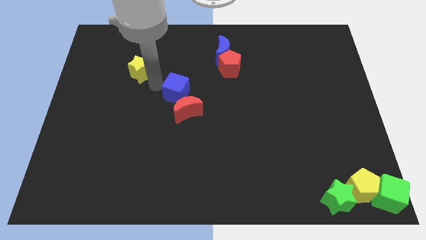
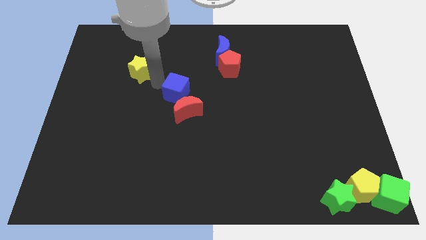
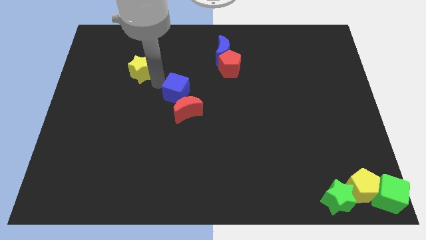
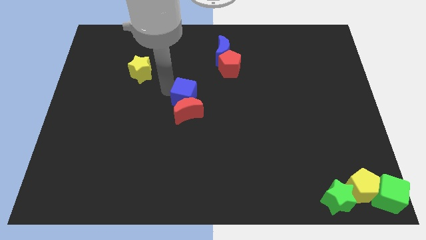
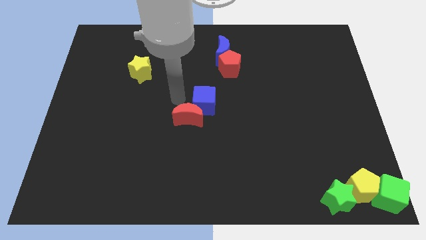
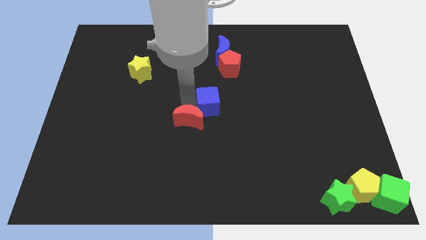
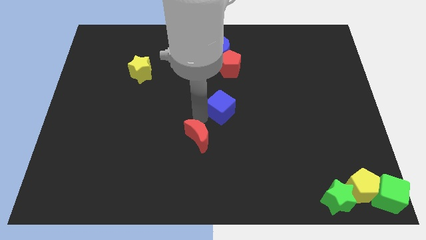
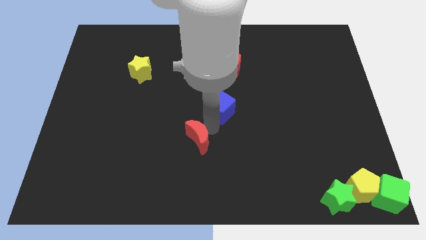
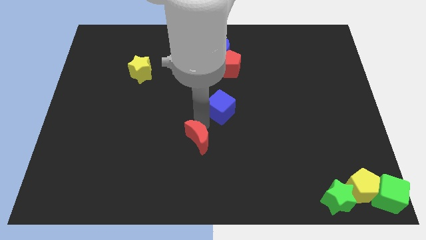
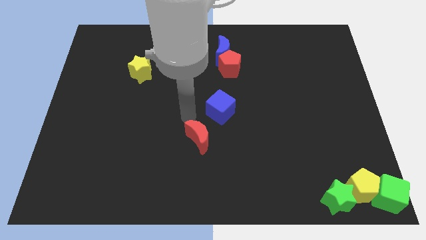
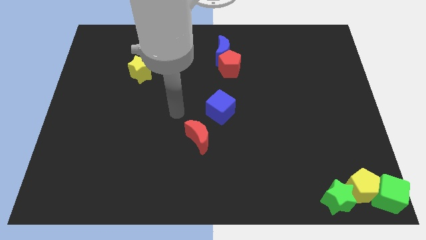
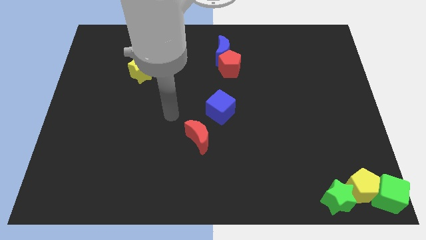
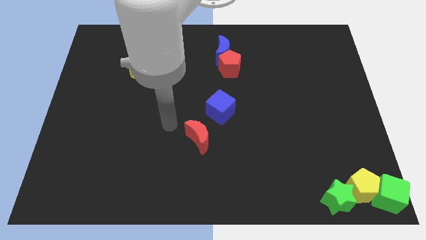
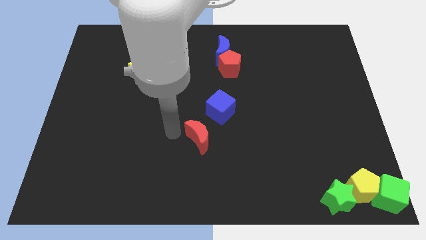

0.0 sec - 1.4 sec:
separate the blue cube and red moon

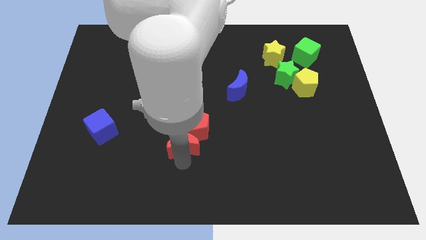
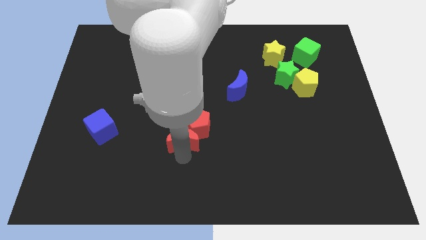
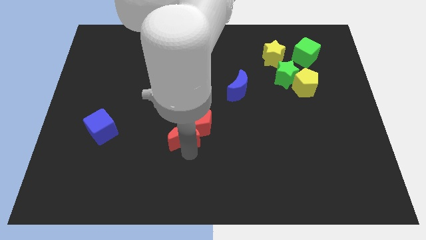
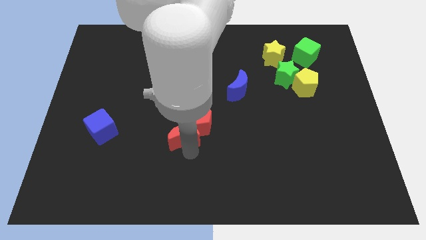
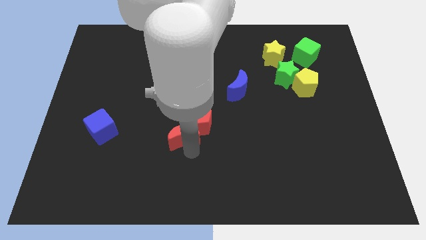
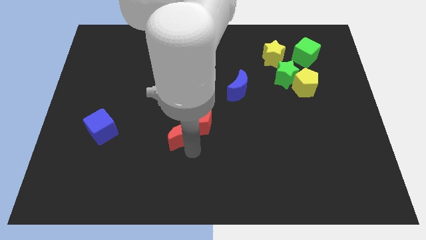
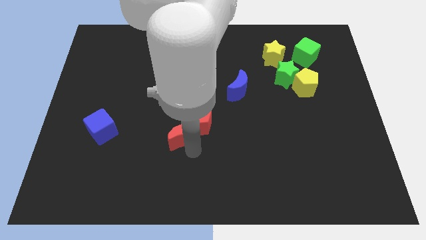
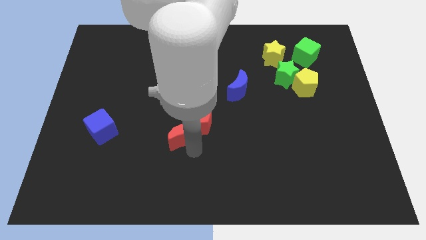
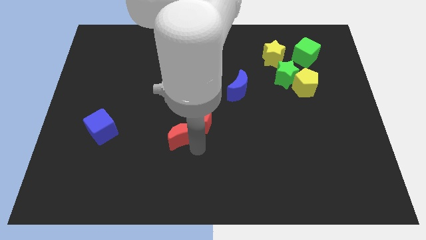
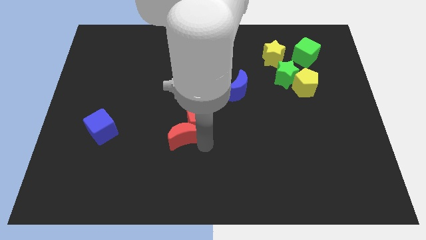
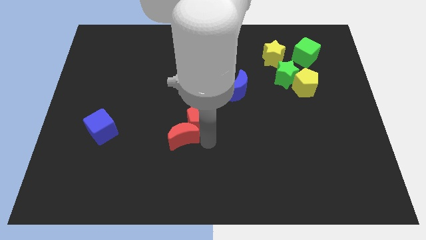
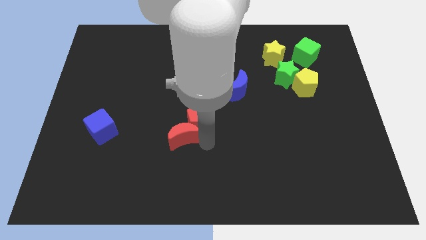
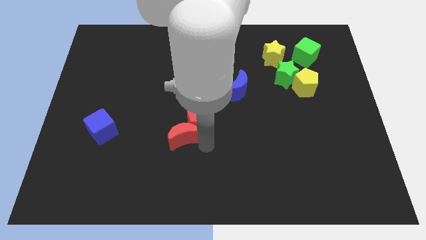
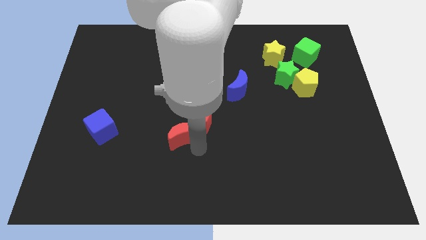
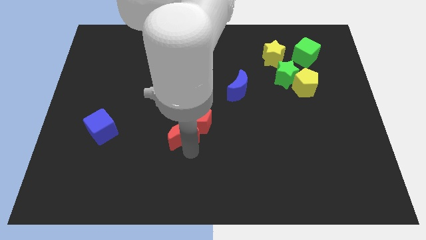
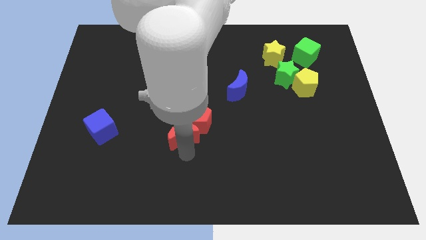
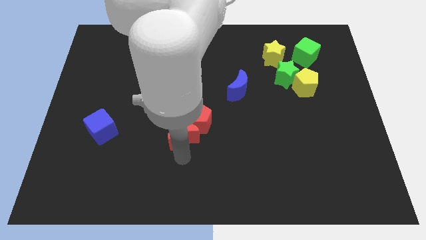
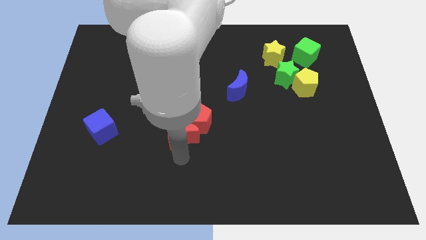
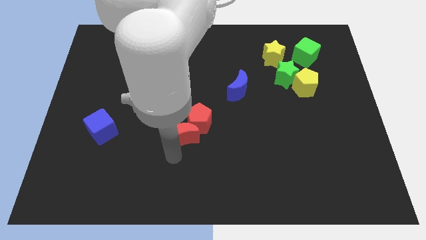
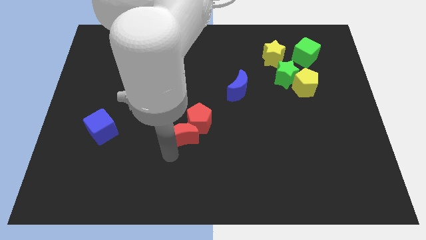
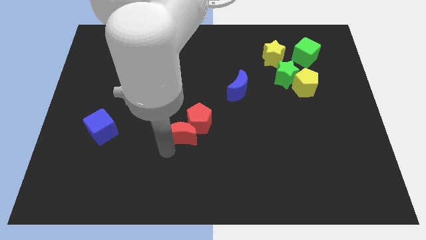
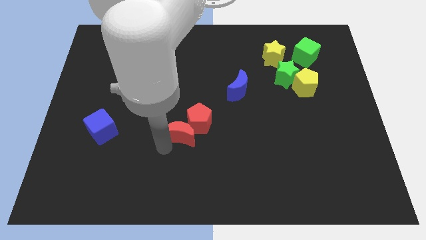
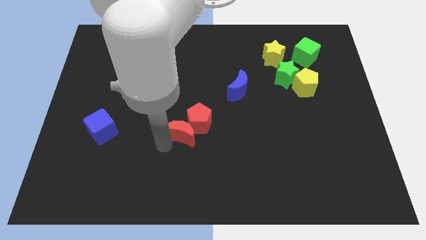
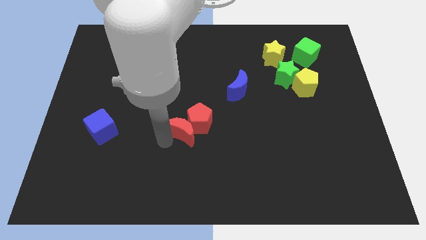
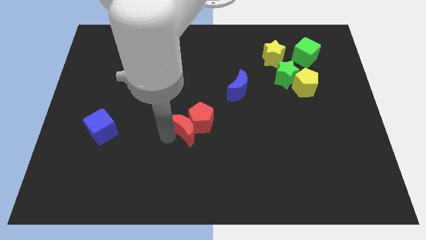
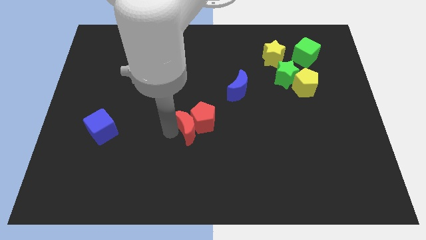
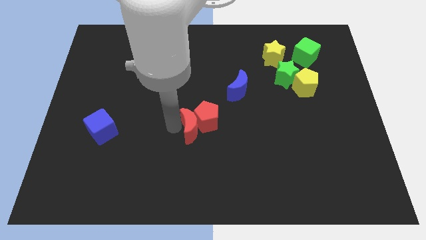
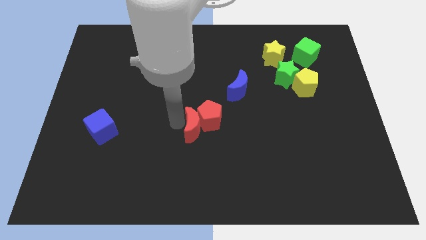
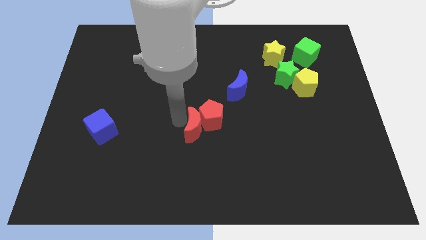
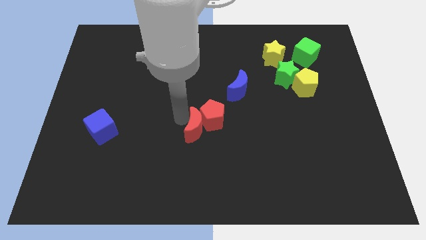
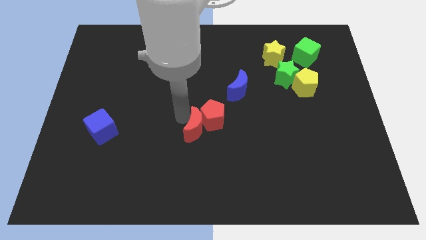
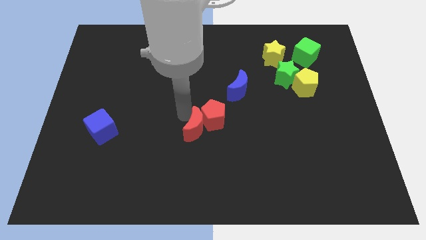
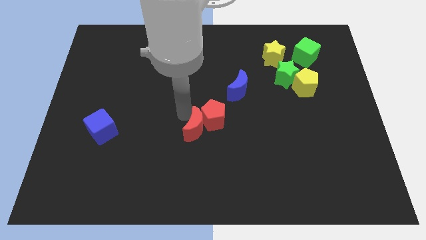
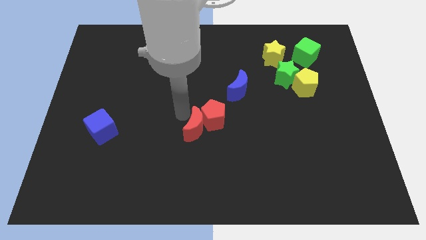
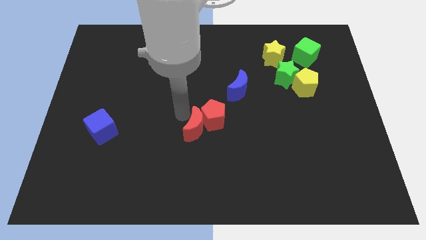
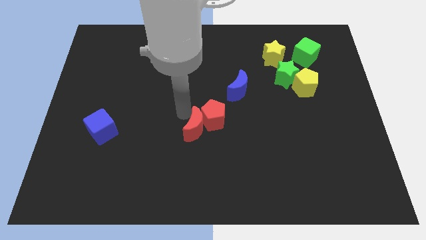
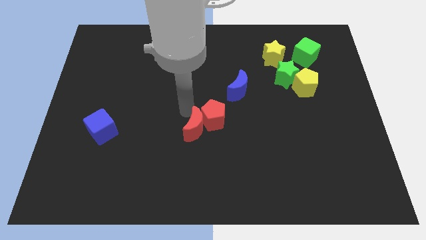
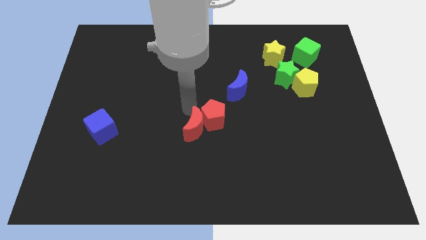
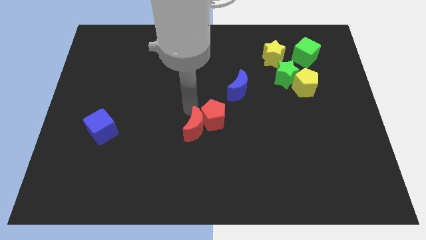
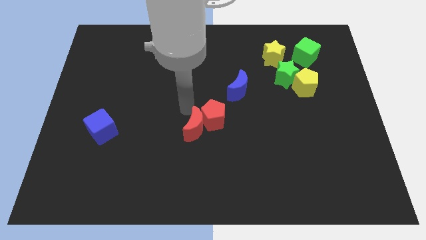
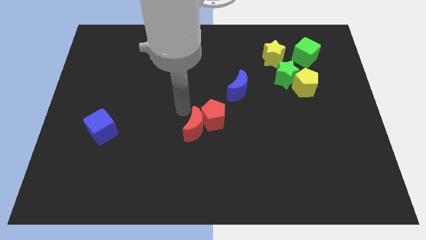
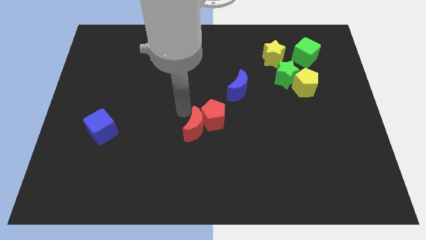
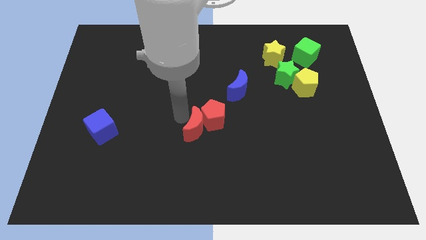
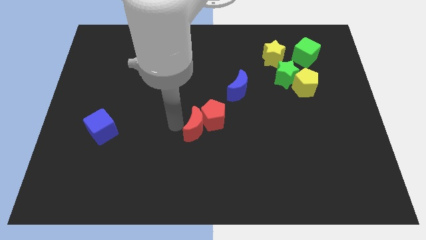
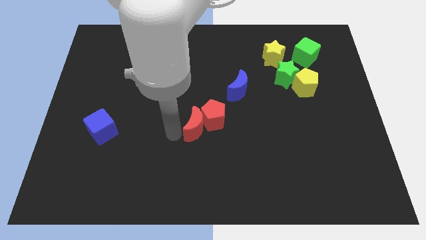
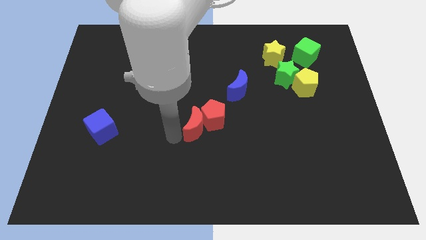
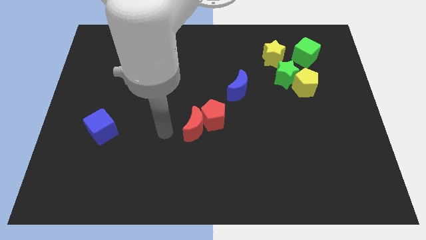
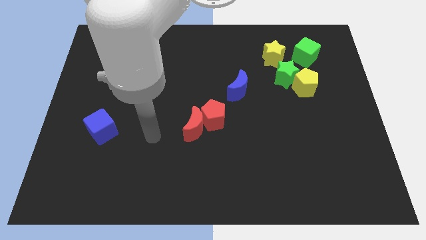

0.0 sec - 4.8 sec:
push the red blocks towards the bottom side of the blue crescent

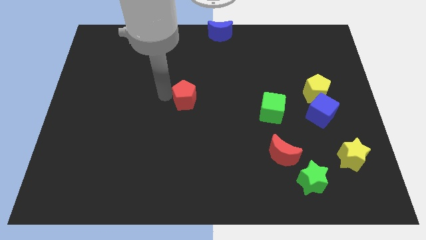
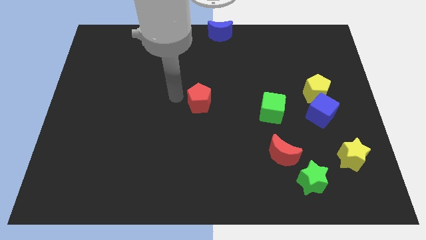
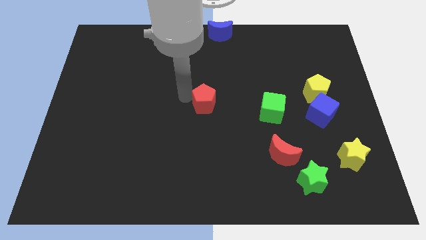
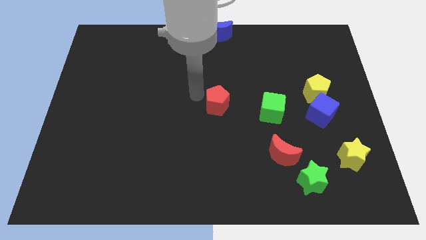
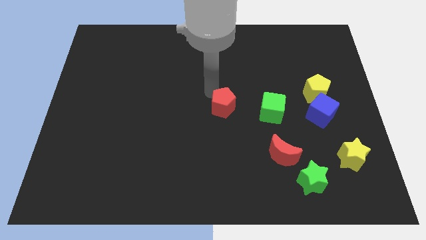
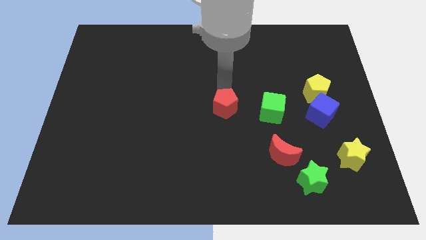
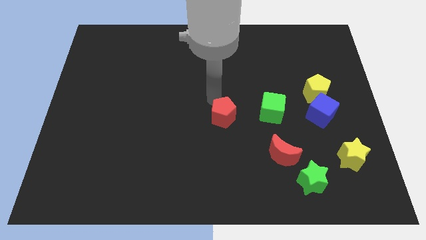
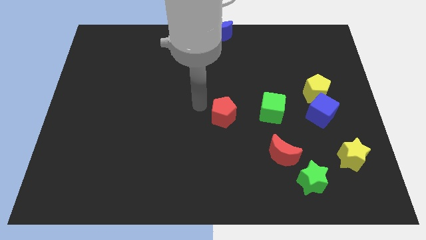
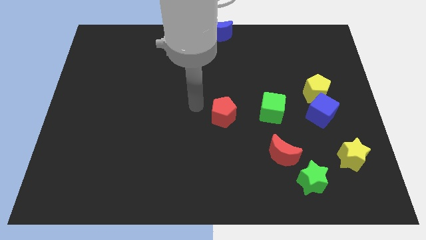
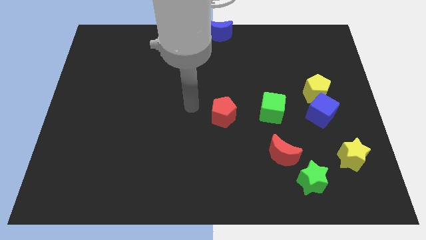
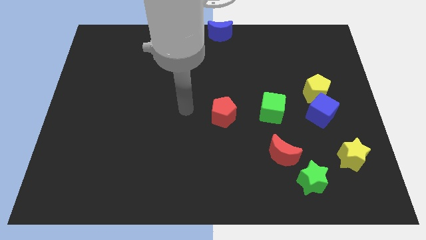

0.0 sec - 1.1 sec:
push red pentagon slight right side down

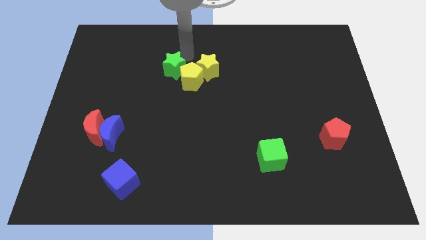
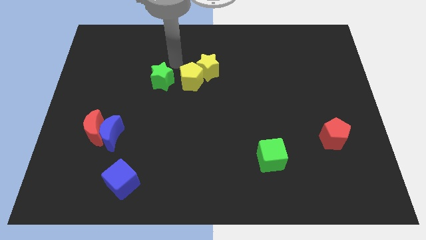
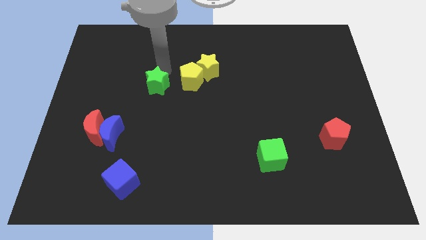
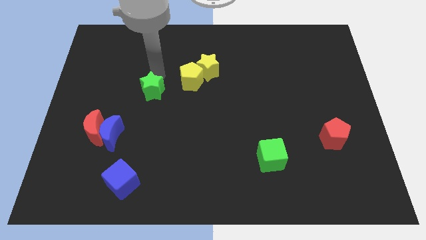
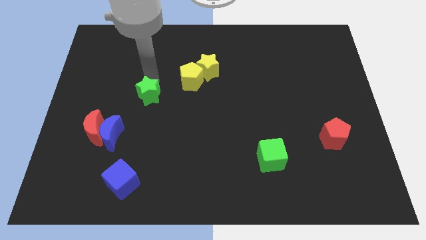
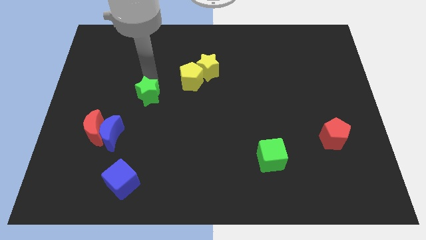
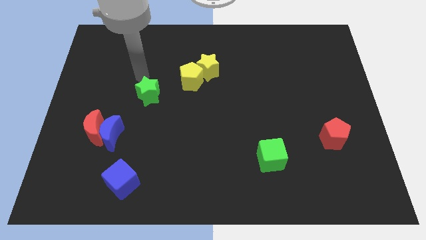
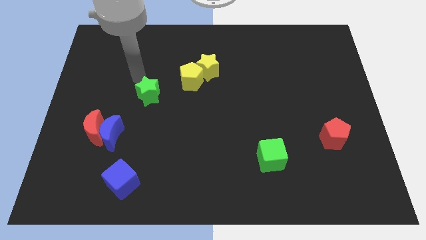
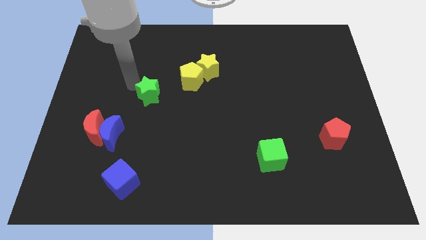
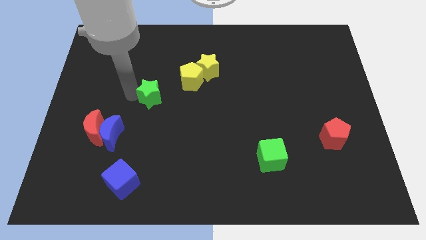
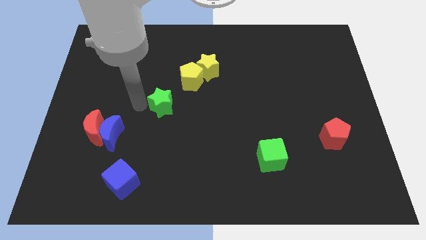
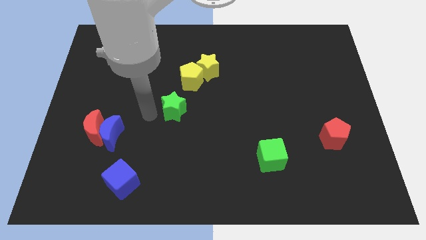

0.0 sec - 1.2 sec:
place the green star in between the yellow pentagon and blue moon diagonally

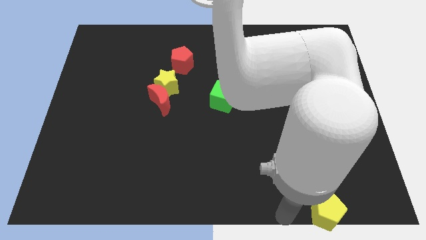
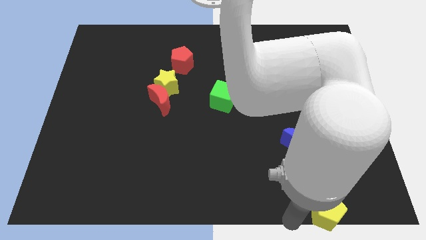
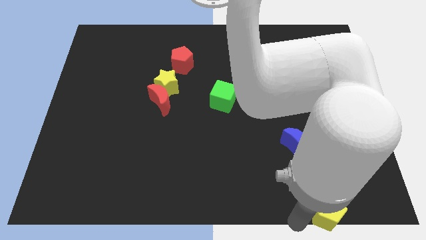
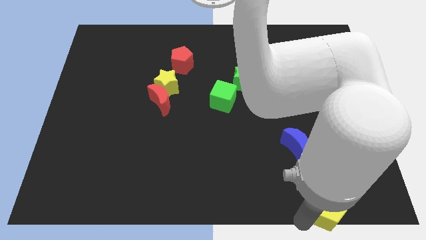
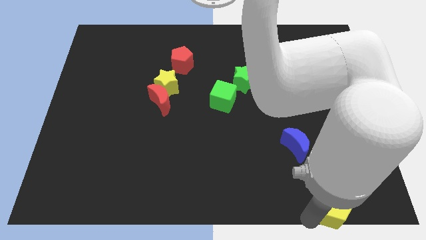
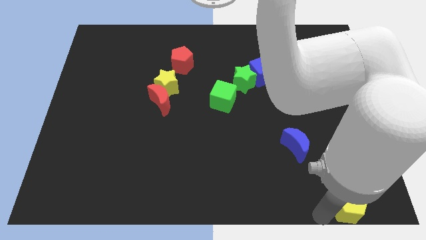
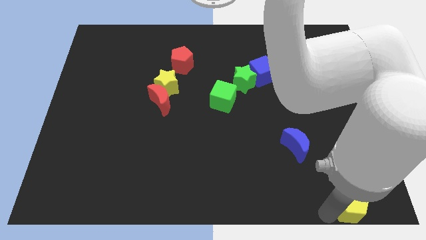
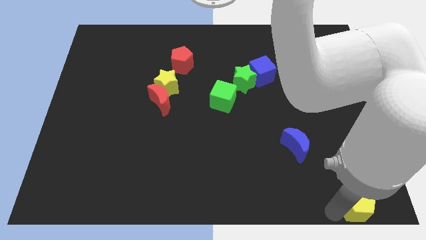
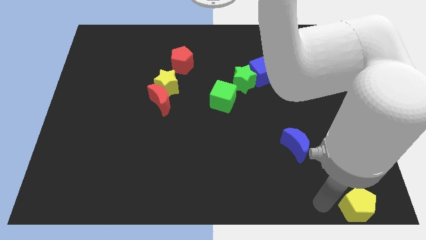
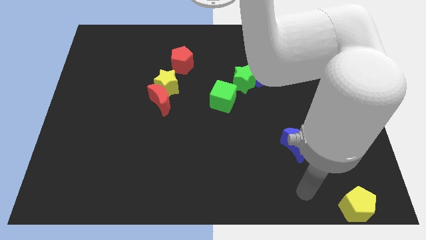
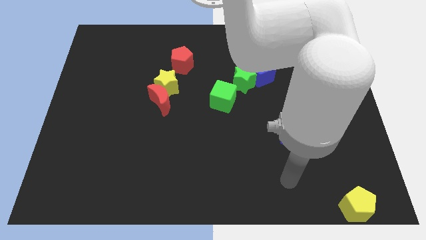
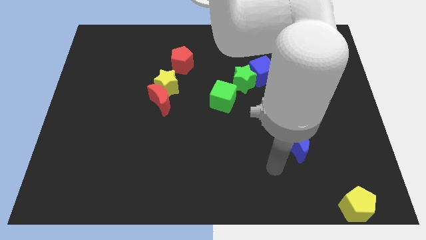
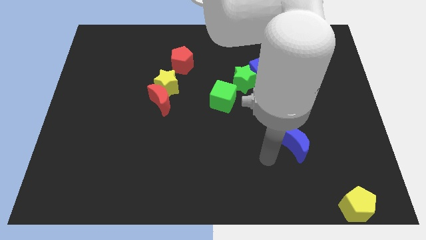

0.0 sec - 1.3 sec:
put the yellow pentagon at the bottom right corner
